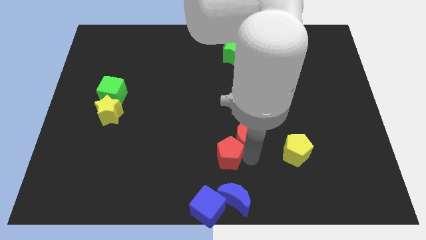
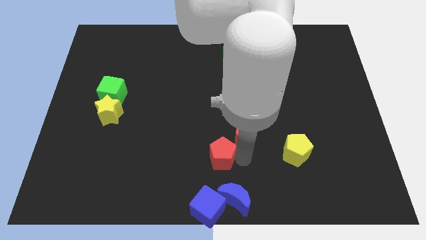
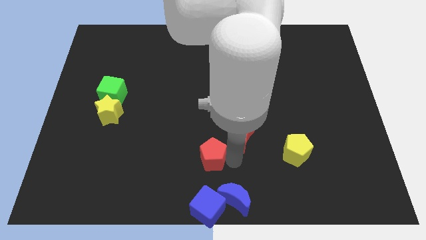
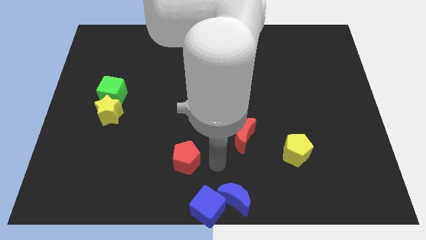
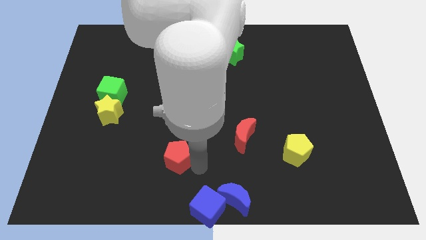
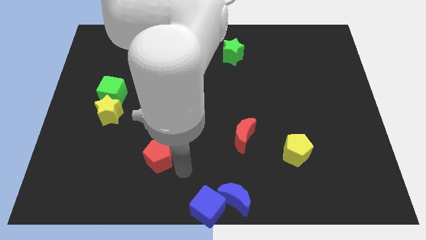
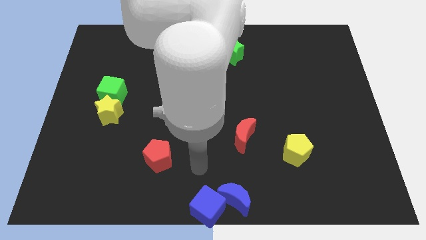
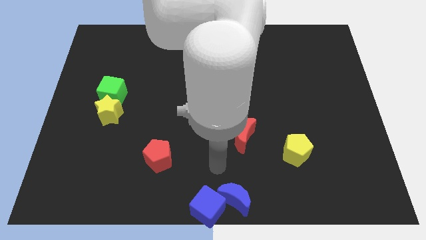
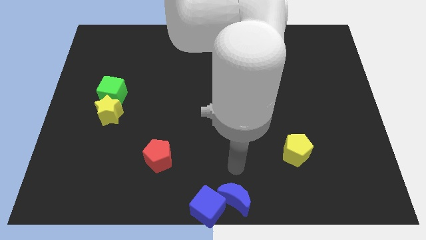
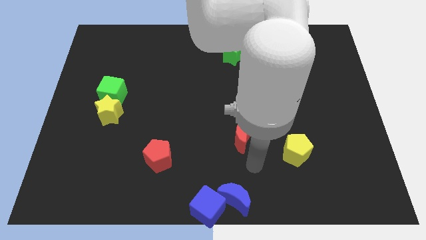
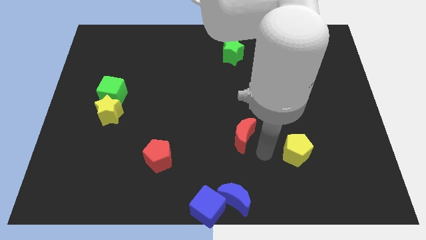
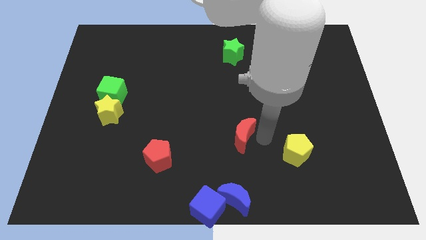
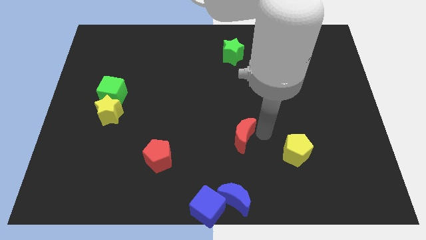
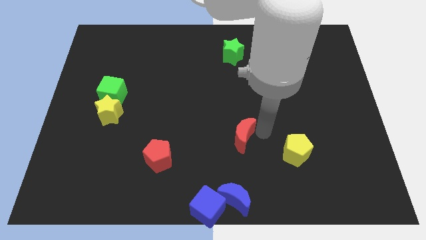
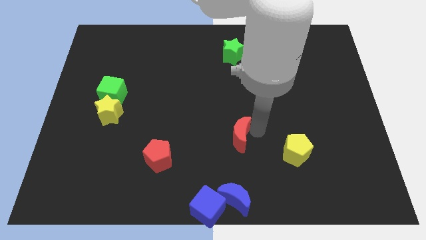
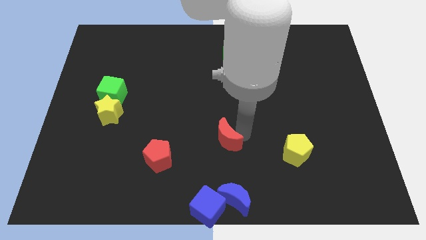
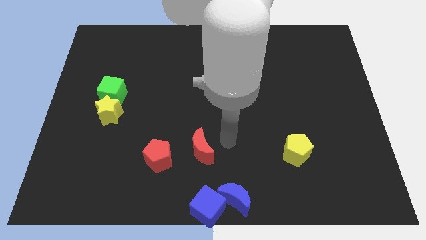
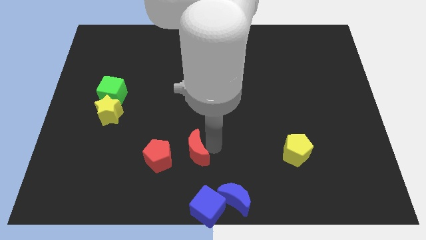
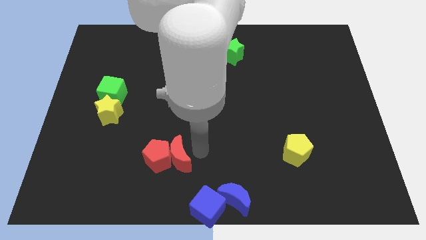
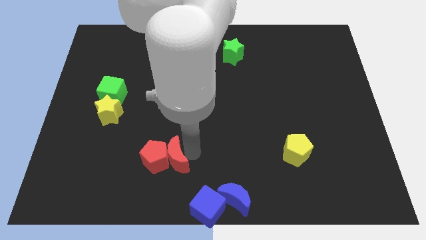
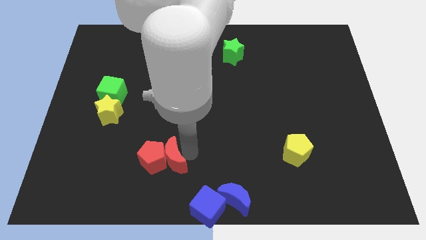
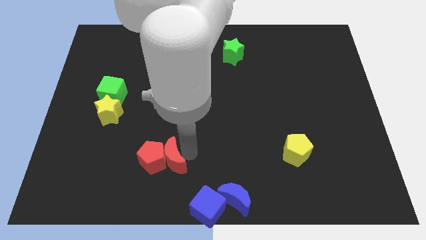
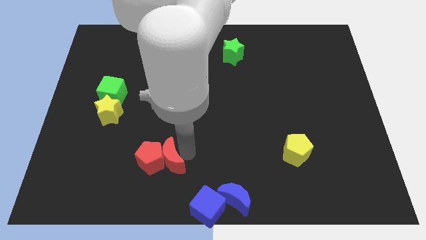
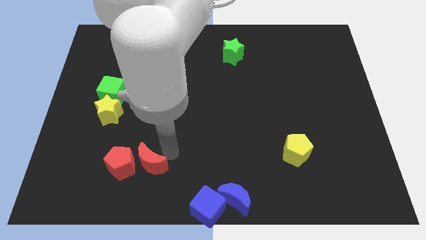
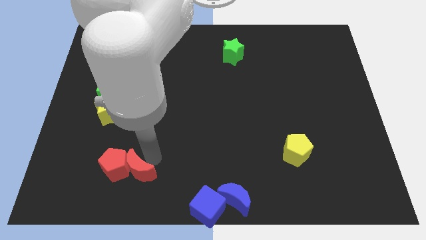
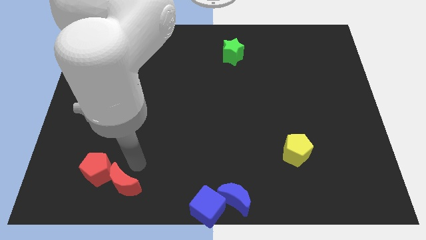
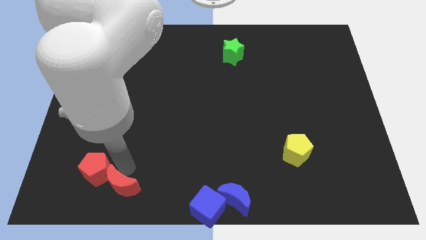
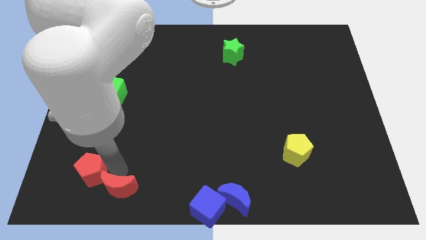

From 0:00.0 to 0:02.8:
move the red blocks to the bottom of the yellow star

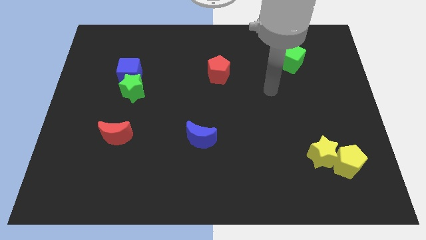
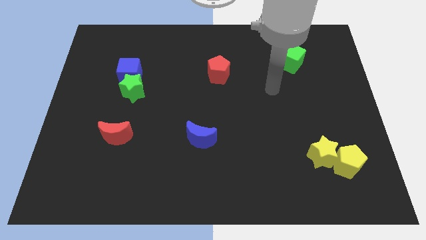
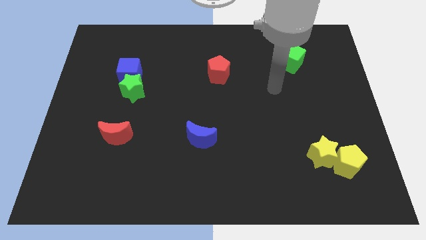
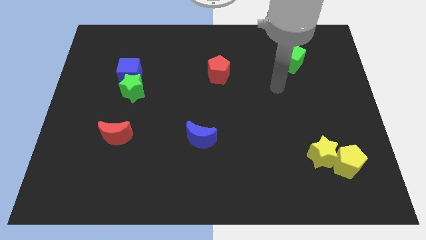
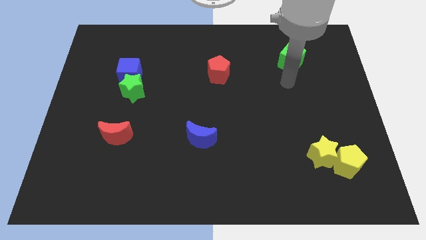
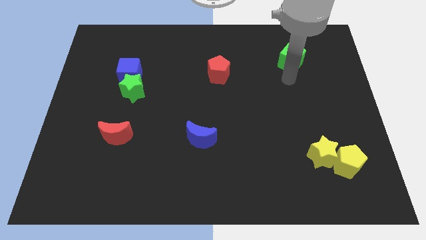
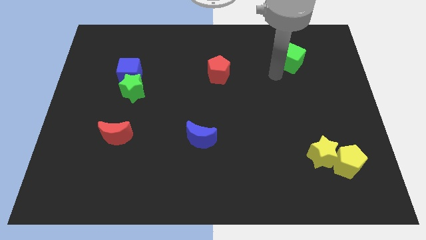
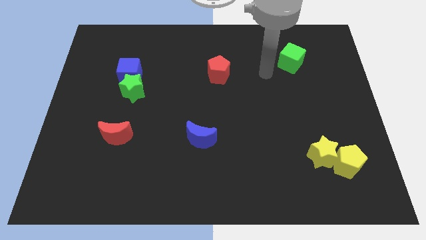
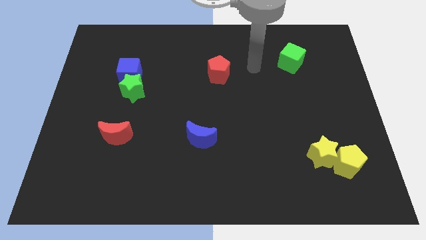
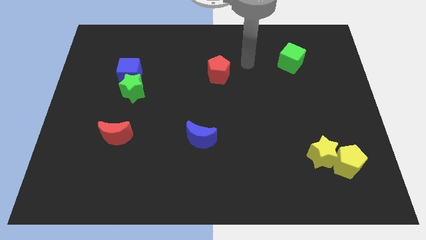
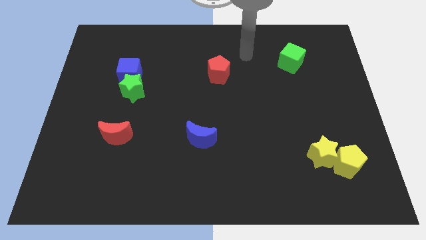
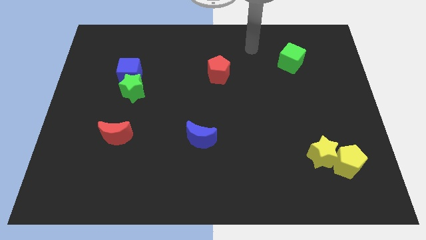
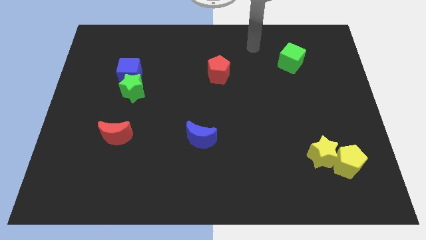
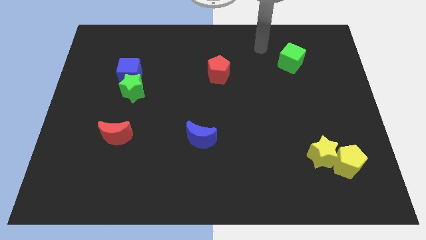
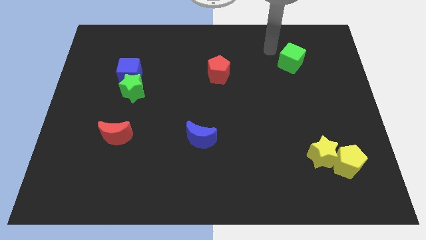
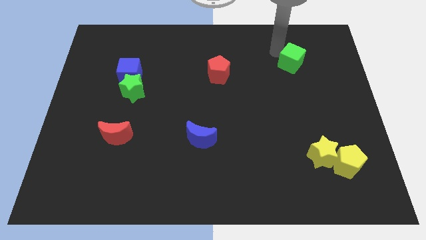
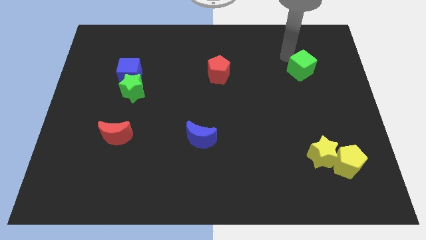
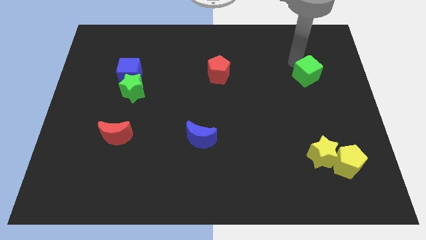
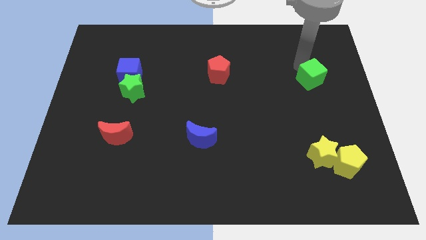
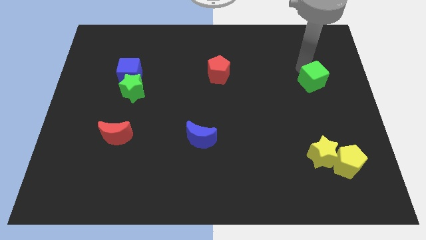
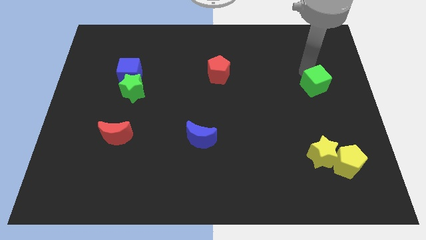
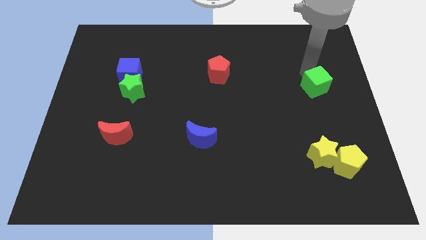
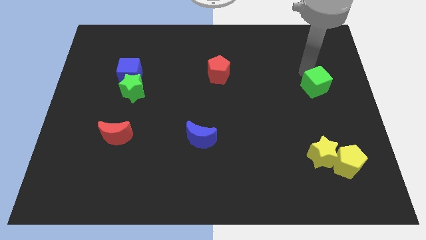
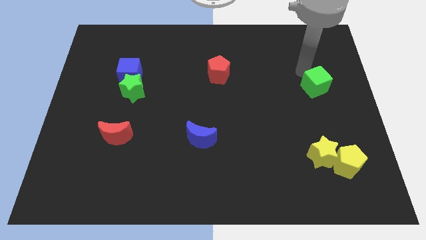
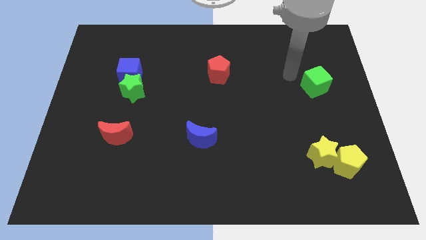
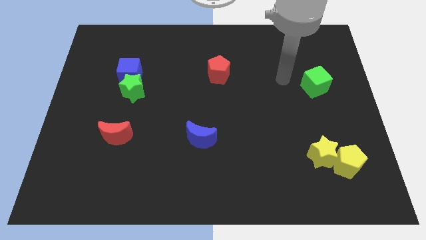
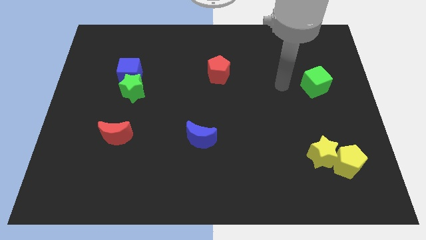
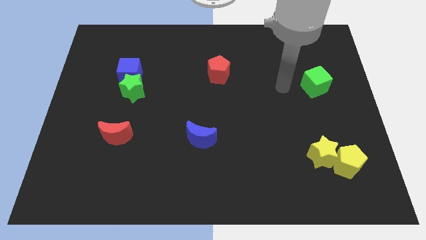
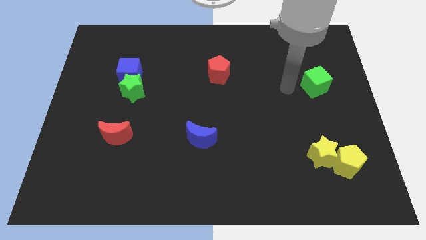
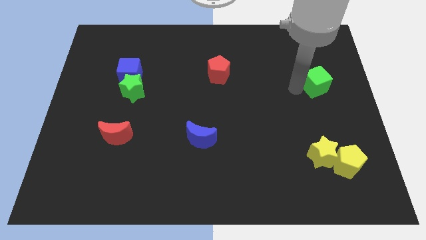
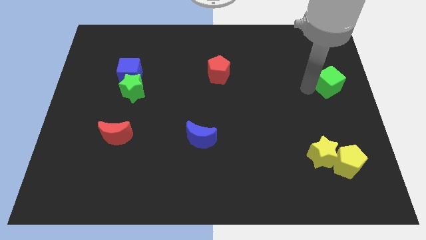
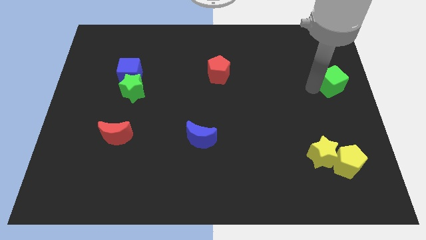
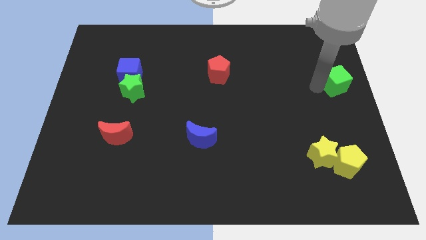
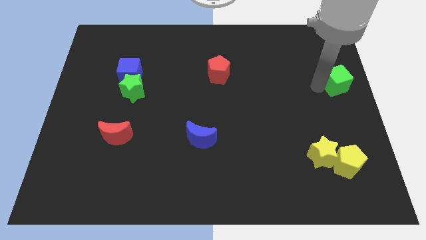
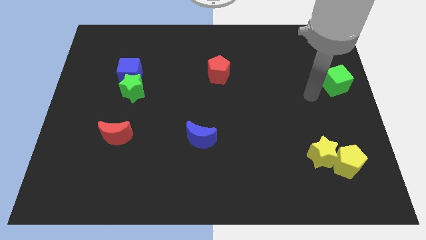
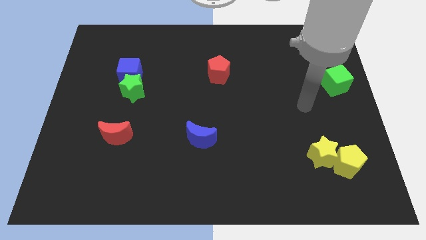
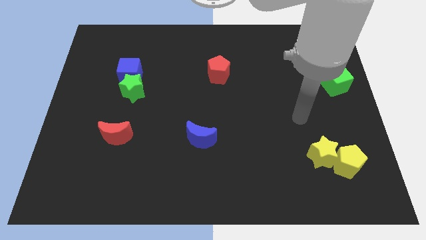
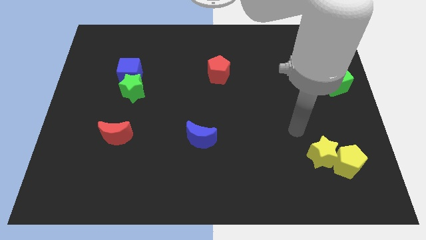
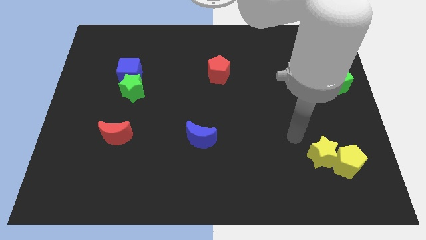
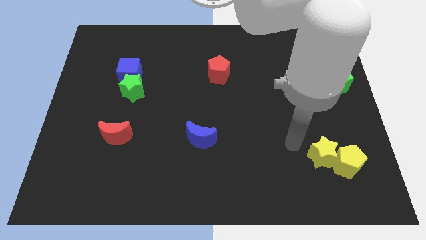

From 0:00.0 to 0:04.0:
move green cube to the right center

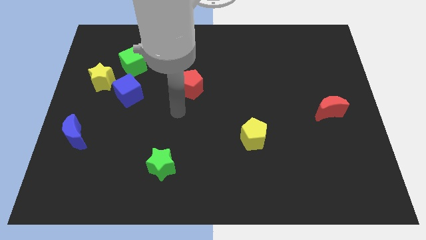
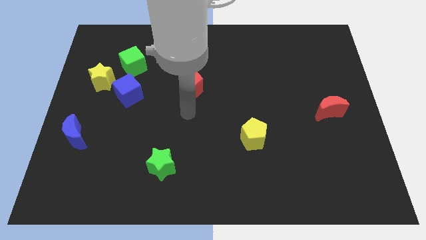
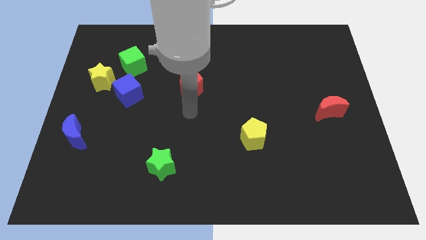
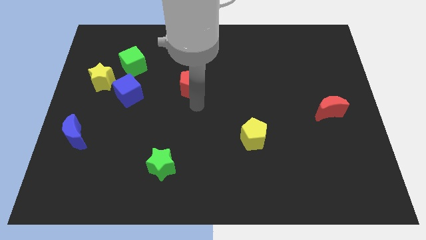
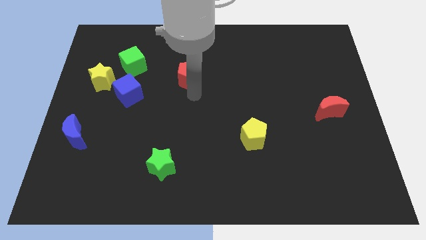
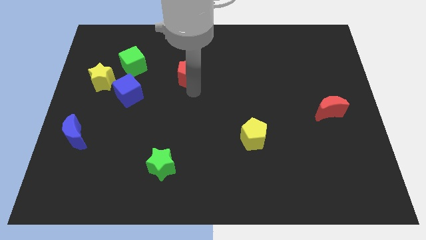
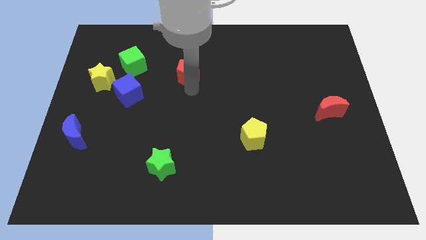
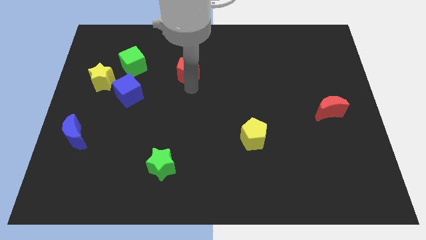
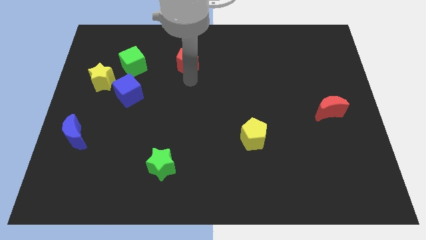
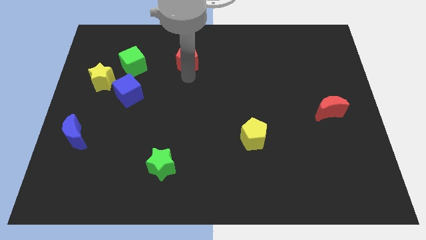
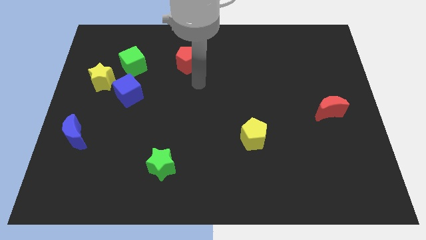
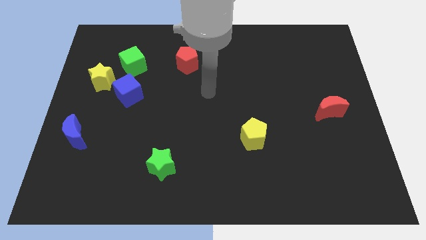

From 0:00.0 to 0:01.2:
push the red pentagon towards the top center of the board

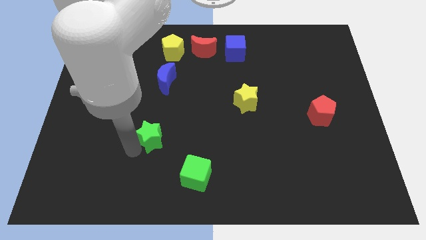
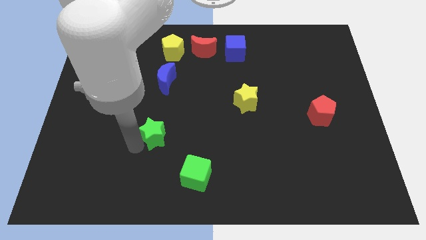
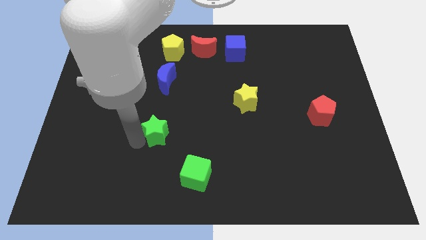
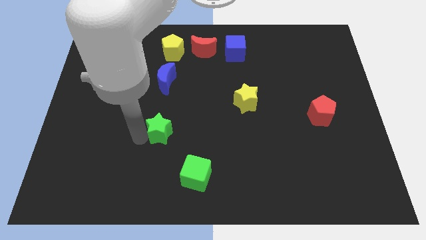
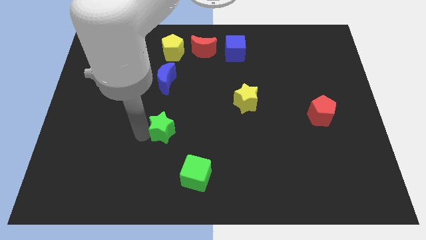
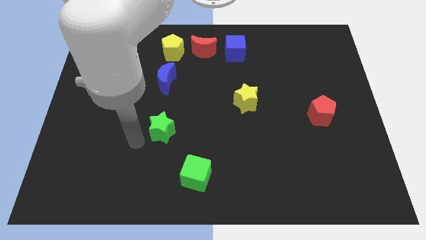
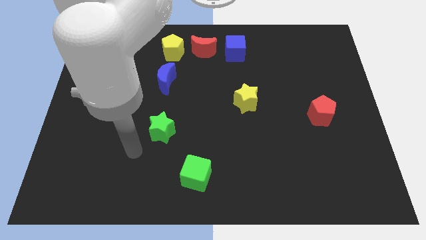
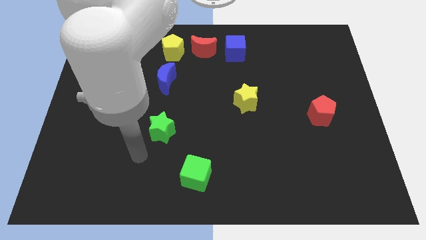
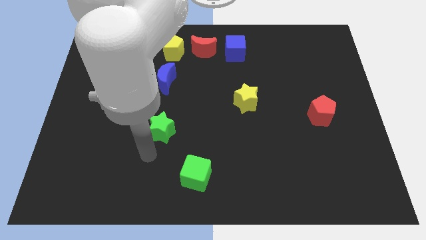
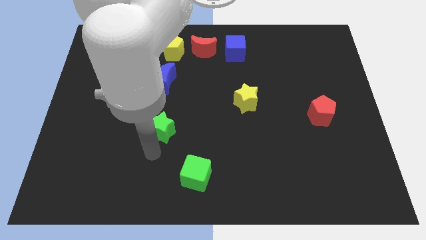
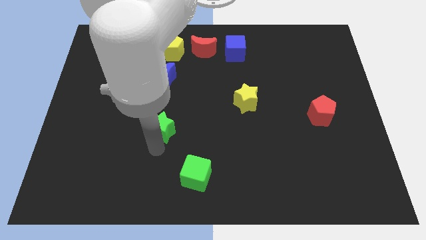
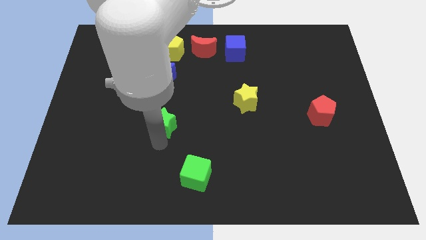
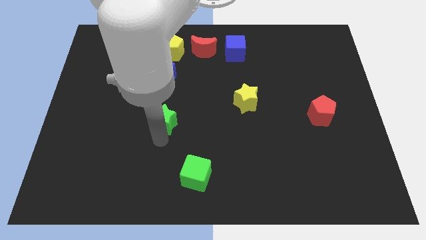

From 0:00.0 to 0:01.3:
move green star towards blue moon
